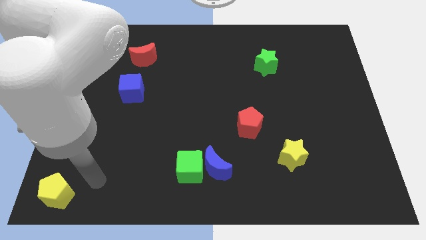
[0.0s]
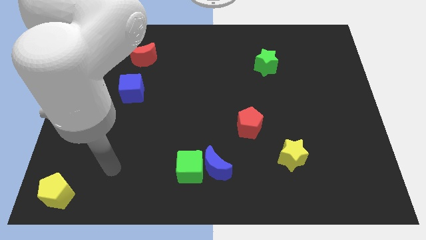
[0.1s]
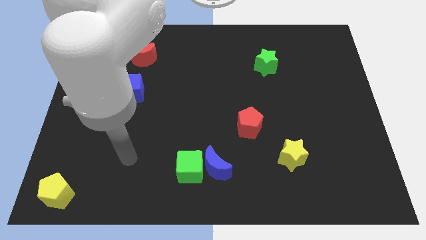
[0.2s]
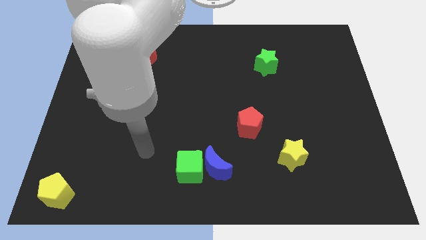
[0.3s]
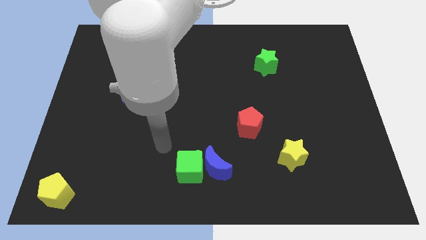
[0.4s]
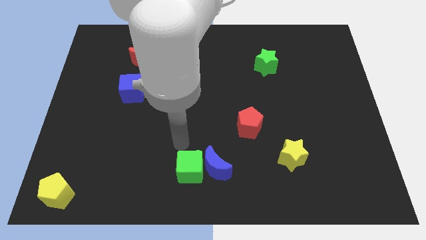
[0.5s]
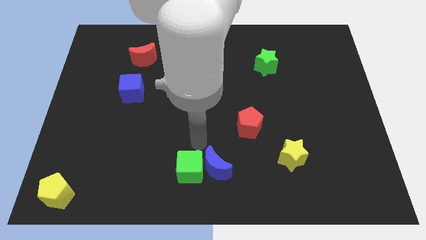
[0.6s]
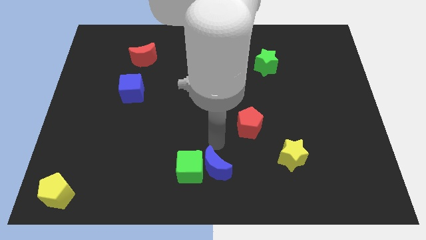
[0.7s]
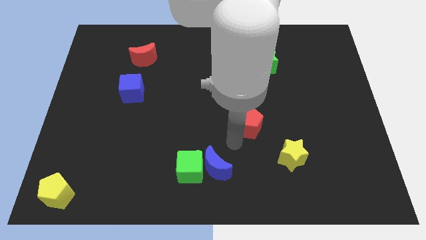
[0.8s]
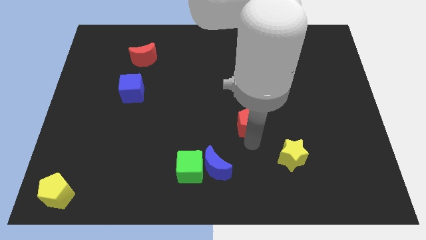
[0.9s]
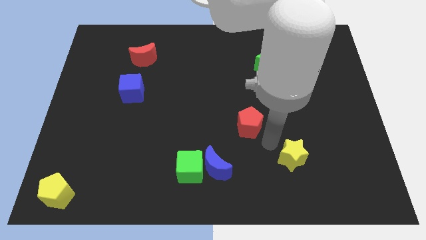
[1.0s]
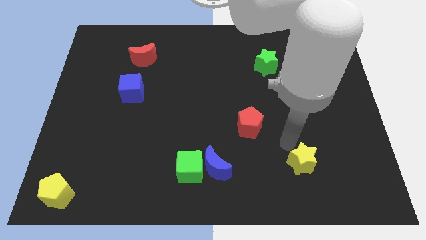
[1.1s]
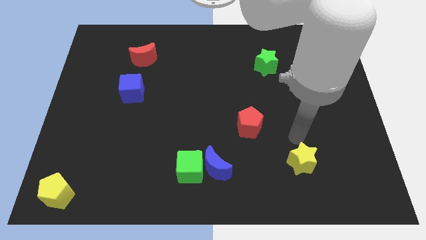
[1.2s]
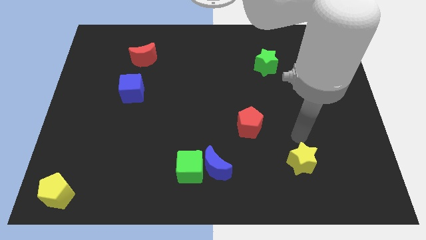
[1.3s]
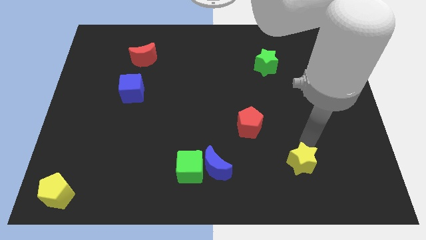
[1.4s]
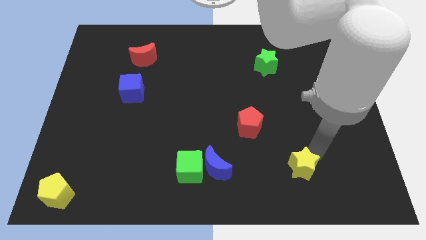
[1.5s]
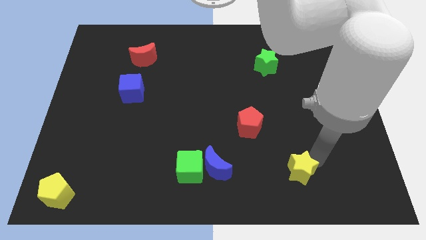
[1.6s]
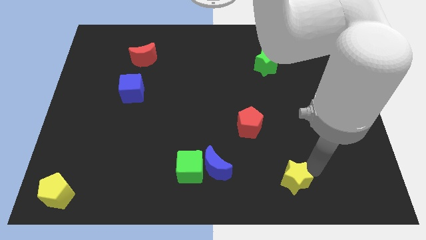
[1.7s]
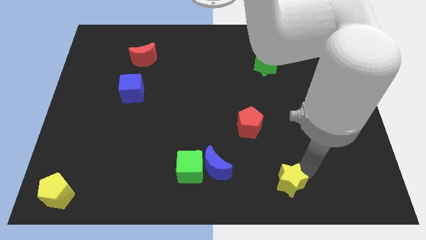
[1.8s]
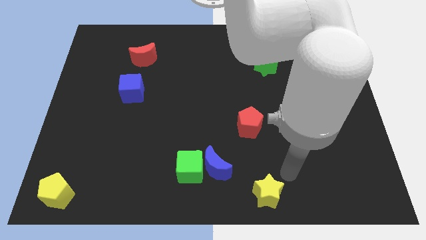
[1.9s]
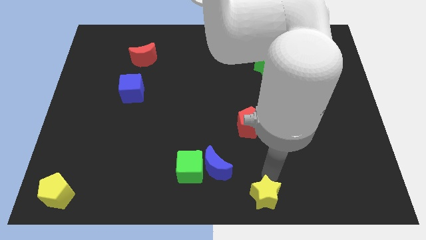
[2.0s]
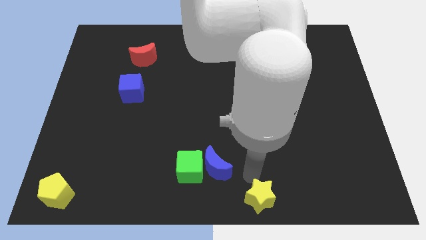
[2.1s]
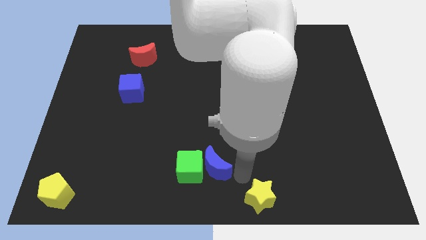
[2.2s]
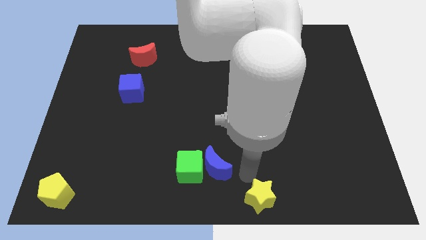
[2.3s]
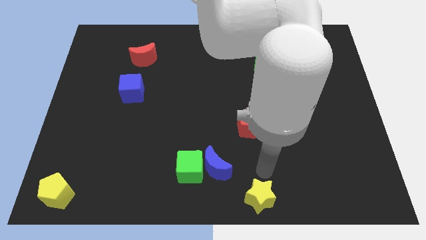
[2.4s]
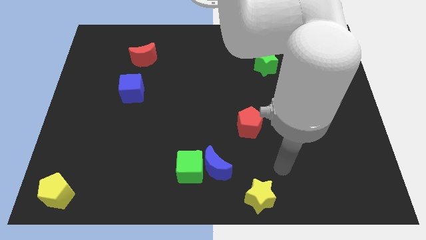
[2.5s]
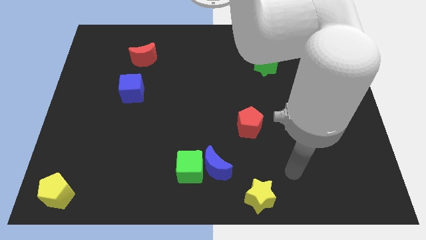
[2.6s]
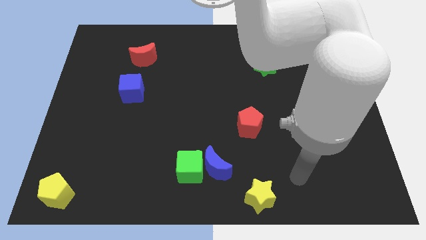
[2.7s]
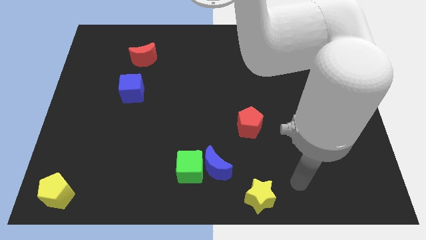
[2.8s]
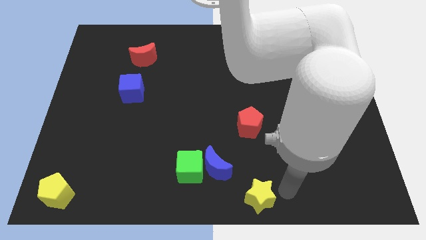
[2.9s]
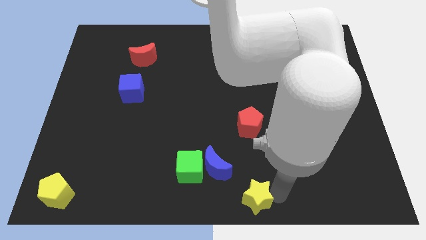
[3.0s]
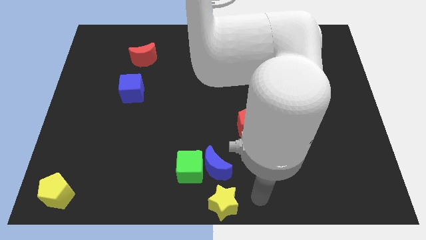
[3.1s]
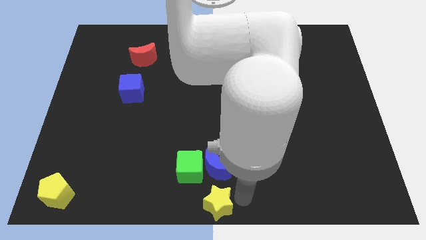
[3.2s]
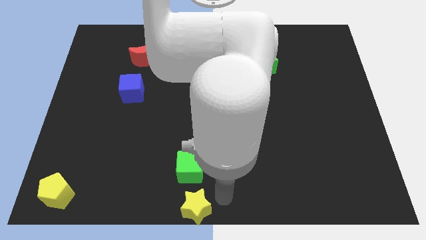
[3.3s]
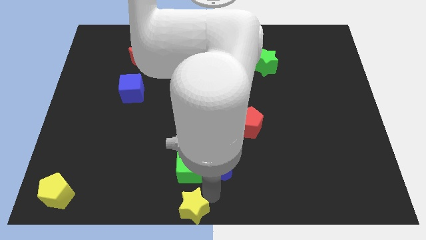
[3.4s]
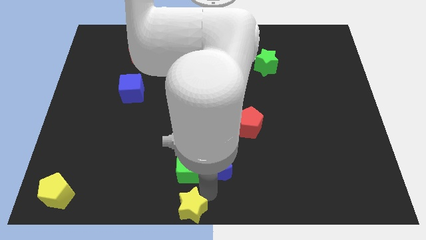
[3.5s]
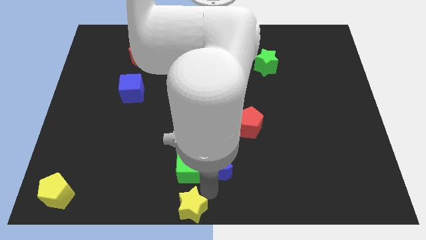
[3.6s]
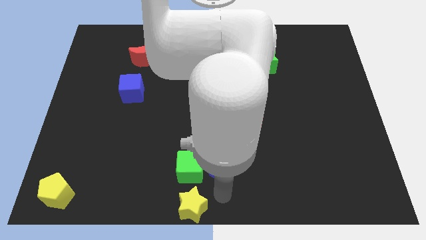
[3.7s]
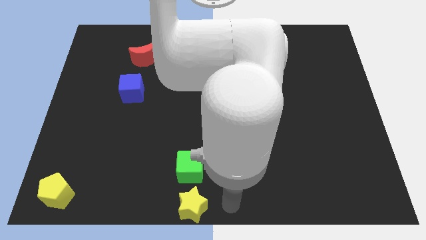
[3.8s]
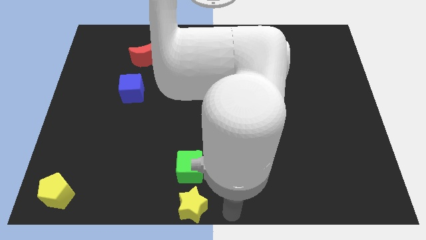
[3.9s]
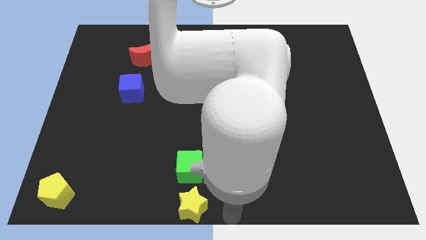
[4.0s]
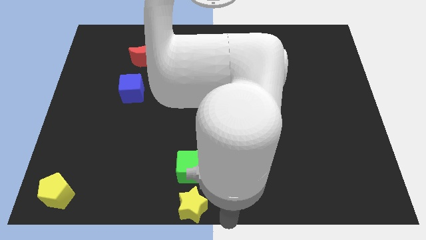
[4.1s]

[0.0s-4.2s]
push the yellow star below the green square

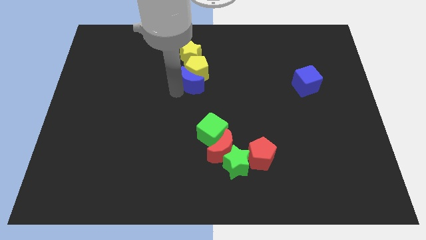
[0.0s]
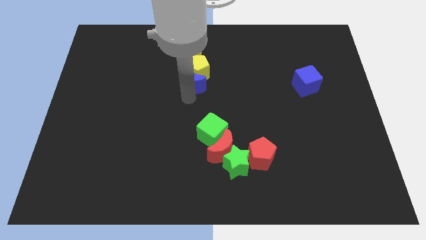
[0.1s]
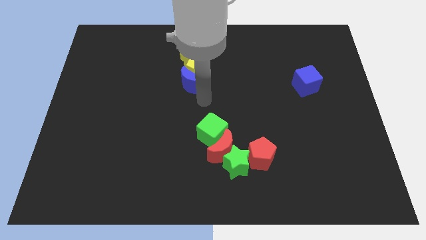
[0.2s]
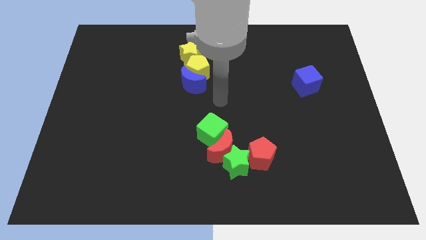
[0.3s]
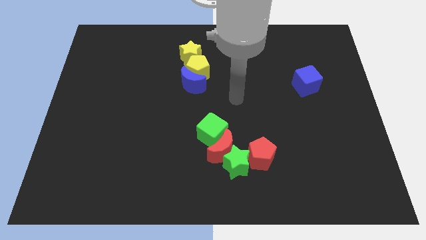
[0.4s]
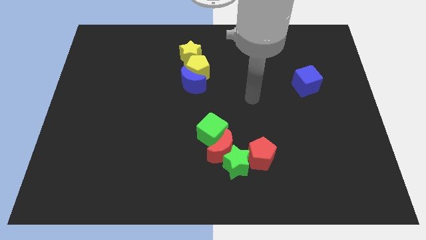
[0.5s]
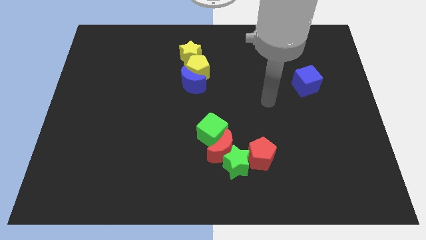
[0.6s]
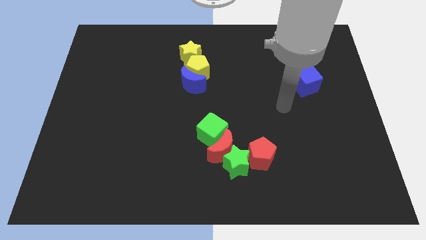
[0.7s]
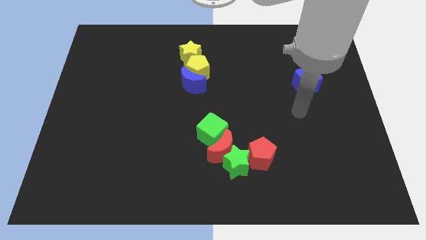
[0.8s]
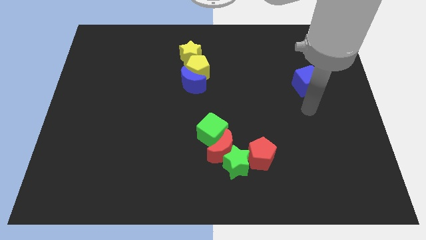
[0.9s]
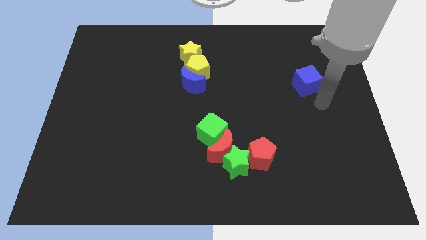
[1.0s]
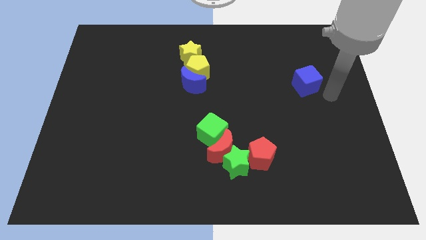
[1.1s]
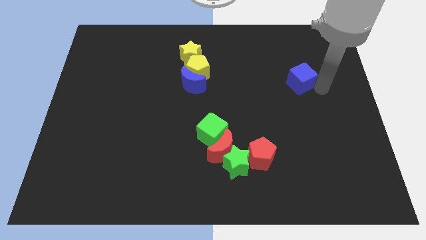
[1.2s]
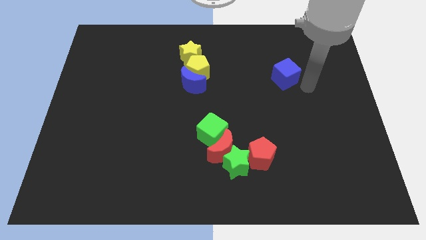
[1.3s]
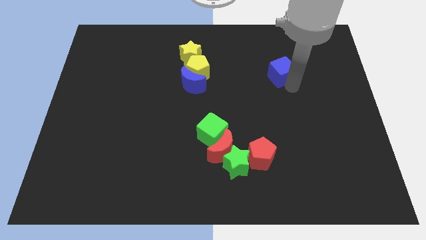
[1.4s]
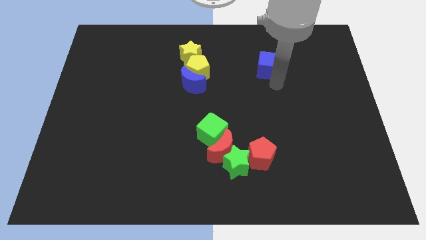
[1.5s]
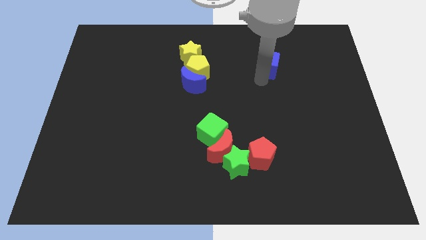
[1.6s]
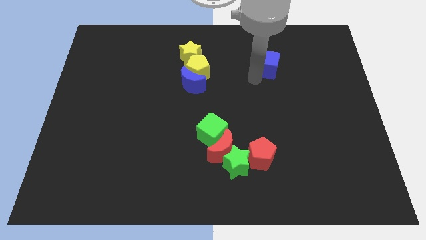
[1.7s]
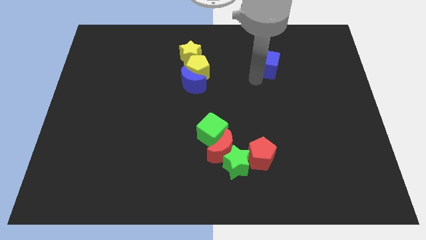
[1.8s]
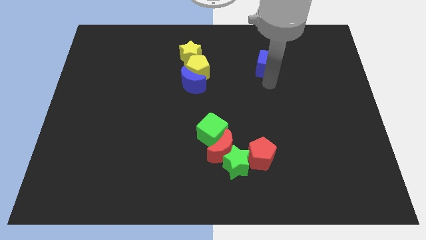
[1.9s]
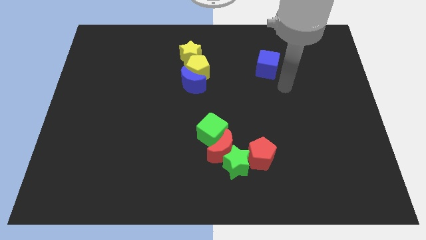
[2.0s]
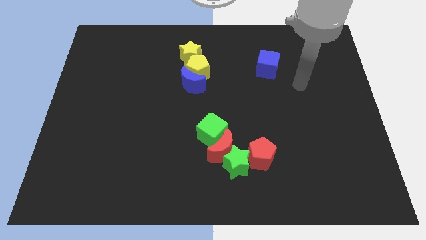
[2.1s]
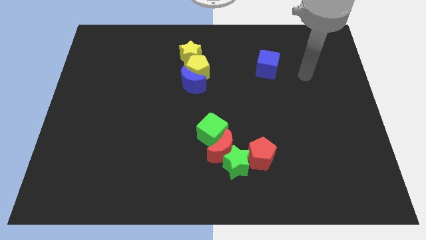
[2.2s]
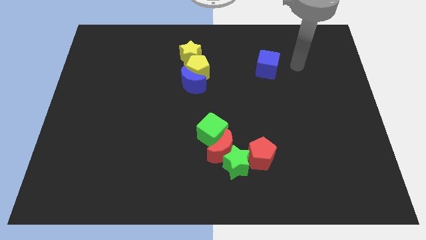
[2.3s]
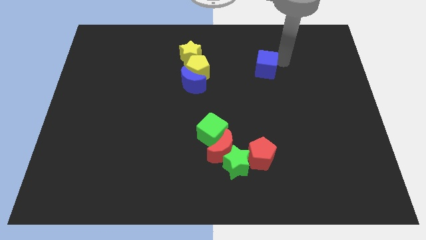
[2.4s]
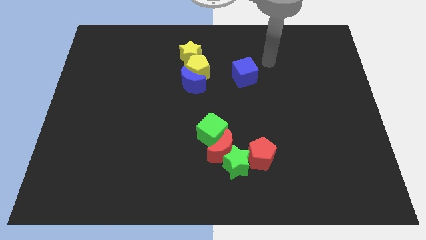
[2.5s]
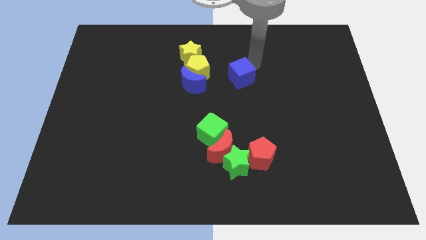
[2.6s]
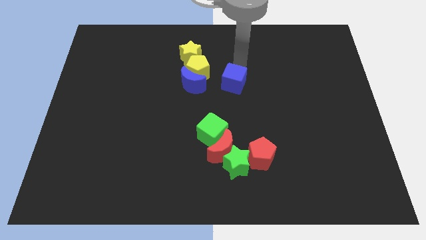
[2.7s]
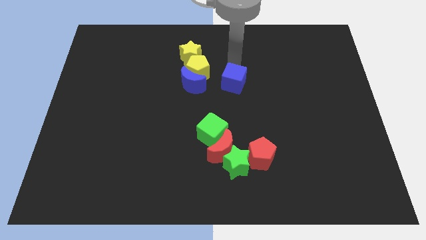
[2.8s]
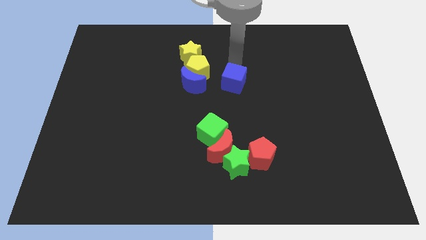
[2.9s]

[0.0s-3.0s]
place the blue cube vertically above the green star

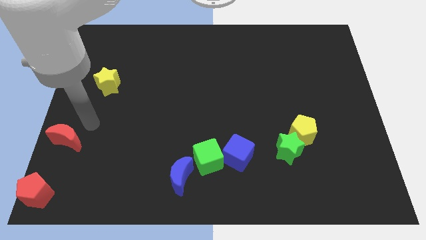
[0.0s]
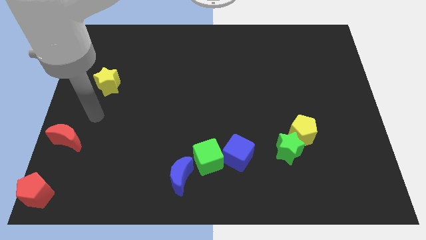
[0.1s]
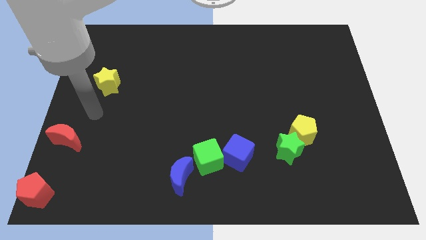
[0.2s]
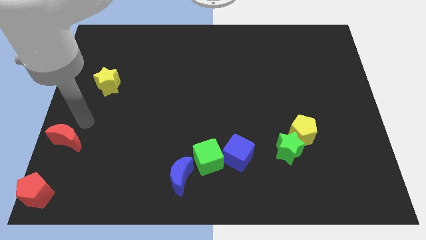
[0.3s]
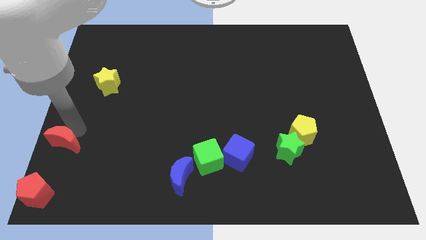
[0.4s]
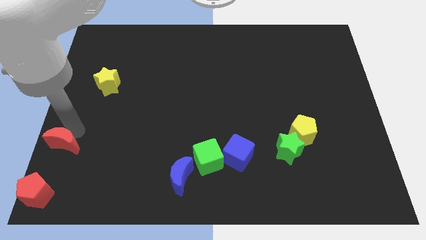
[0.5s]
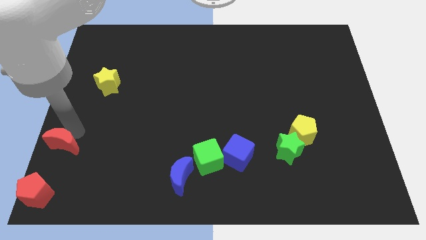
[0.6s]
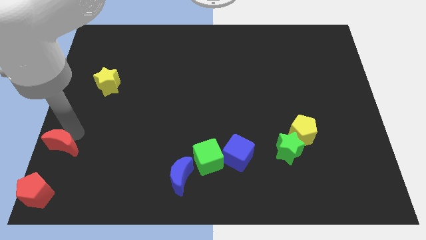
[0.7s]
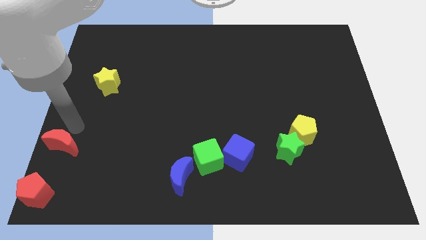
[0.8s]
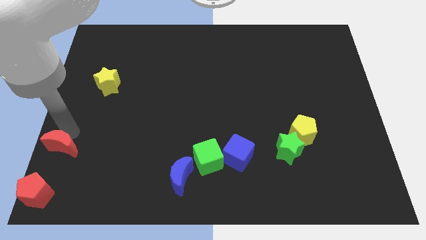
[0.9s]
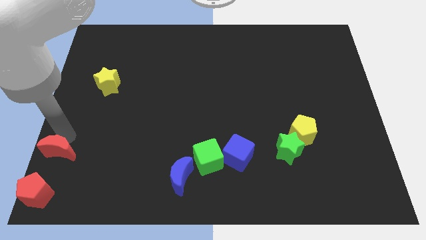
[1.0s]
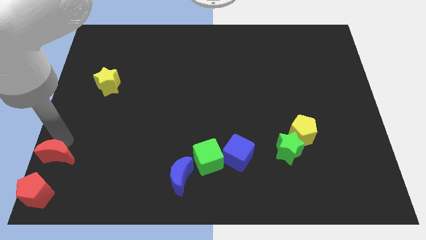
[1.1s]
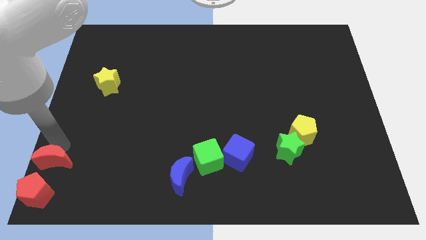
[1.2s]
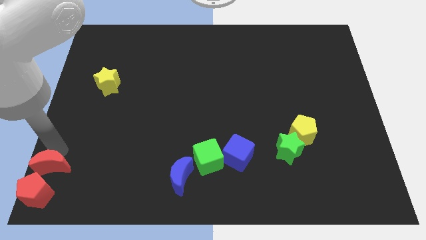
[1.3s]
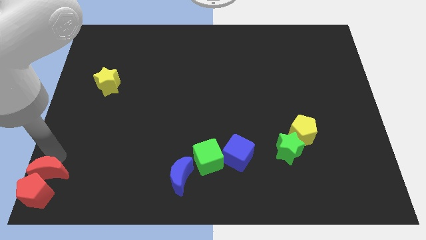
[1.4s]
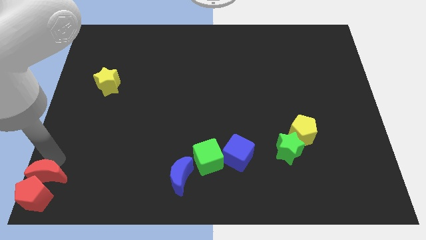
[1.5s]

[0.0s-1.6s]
place the red moon in between the yellow star and blue moon

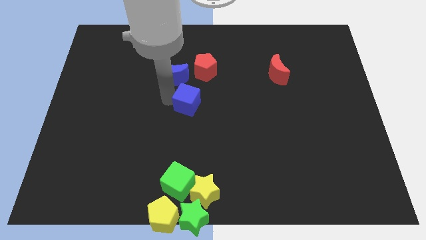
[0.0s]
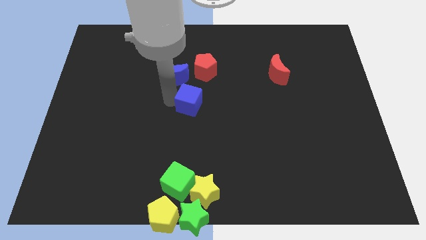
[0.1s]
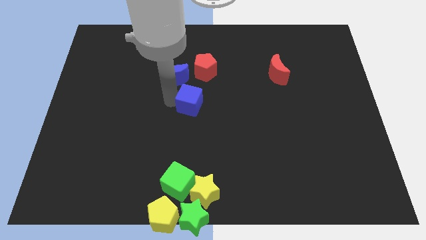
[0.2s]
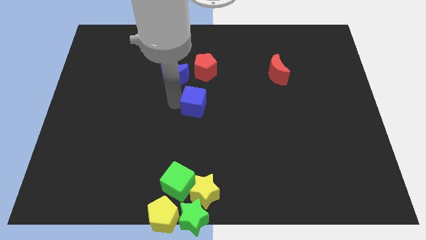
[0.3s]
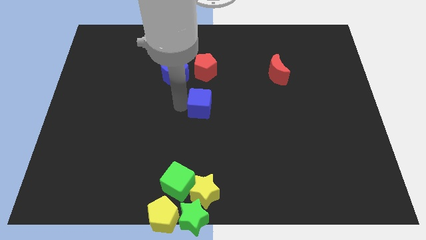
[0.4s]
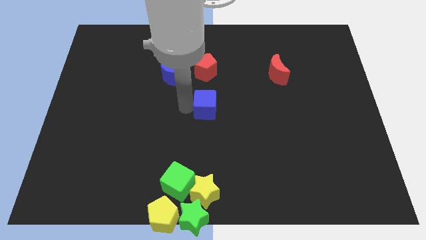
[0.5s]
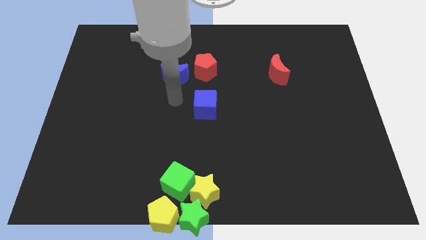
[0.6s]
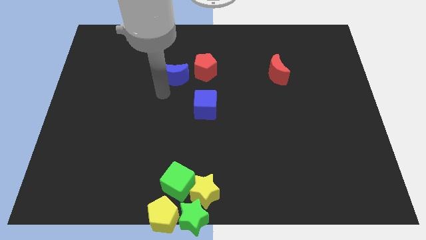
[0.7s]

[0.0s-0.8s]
put the blue cube underneath the red pentagon
